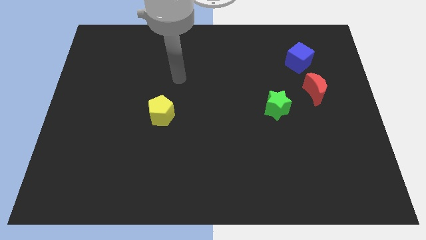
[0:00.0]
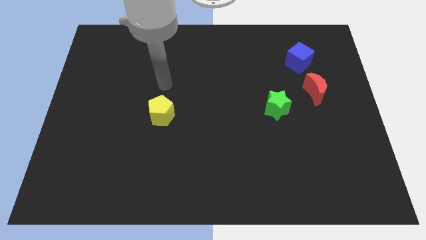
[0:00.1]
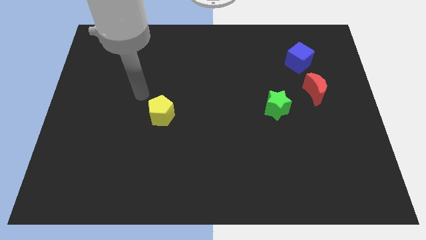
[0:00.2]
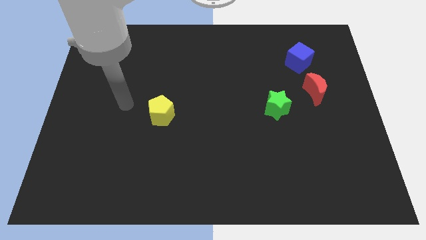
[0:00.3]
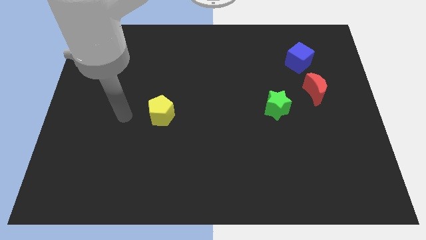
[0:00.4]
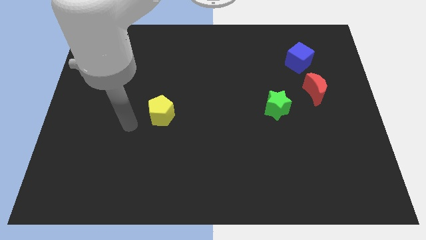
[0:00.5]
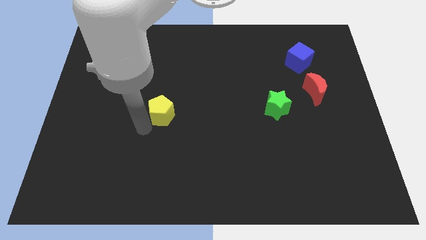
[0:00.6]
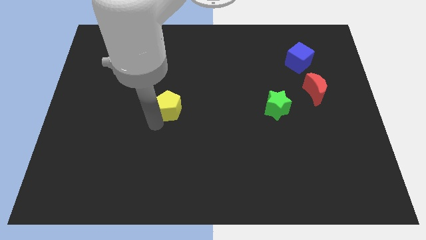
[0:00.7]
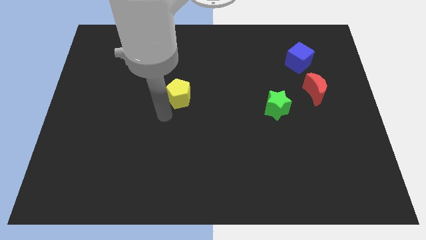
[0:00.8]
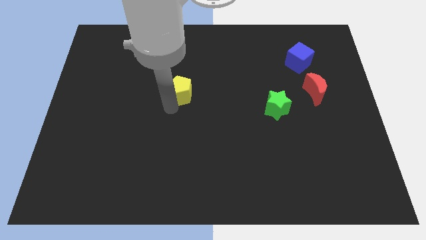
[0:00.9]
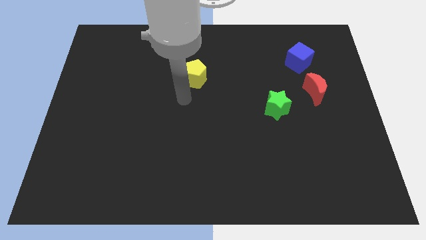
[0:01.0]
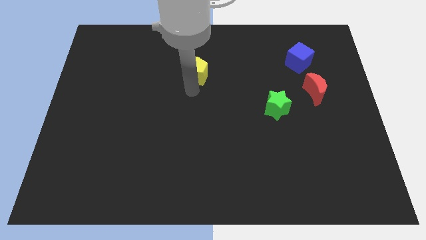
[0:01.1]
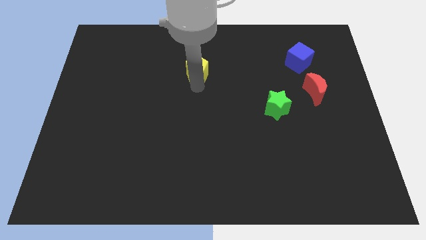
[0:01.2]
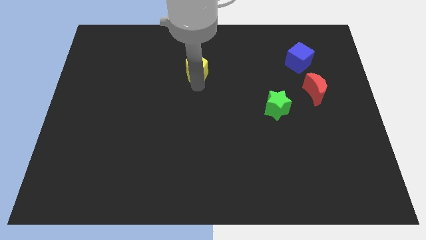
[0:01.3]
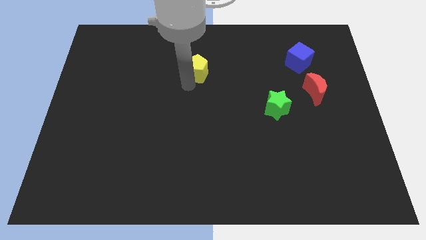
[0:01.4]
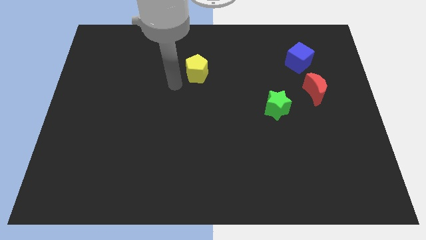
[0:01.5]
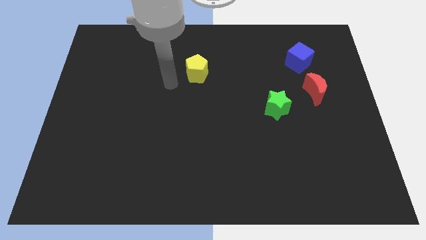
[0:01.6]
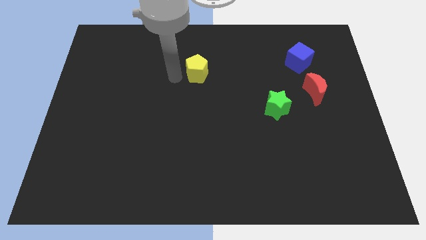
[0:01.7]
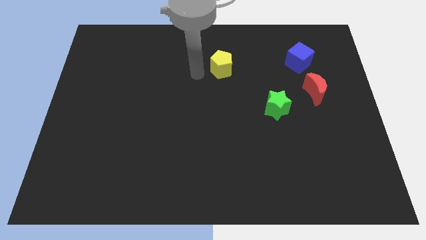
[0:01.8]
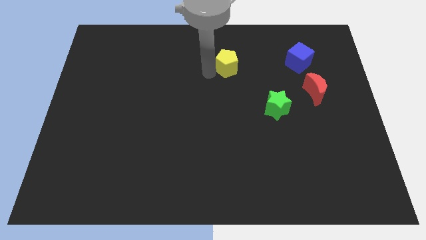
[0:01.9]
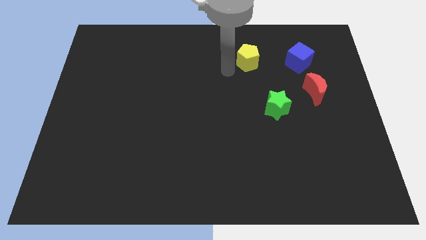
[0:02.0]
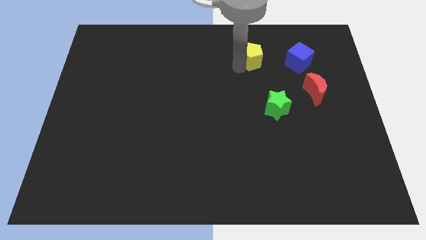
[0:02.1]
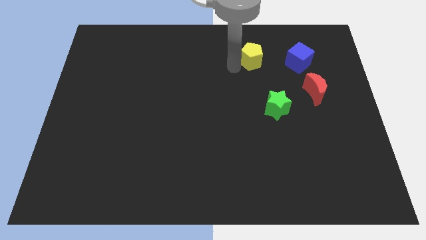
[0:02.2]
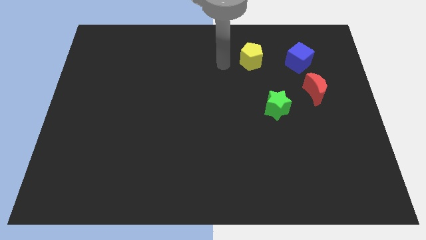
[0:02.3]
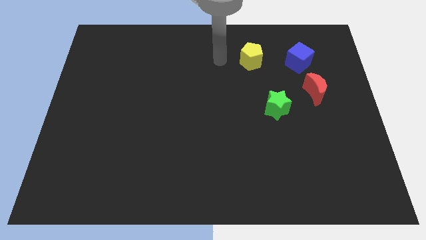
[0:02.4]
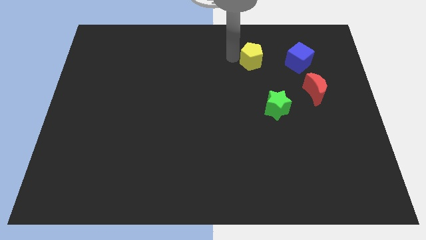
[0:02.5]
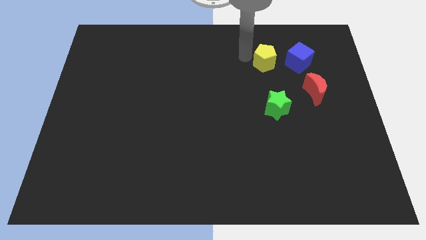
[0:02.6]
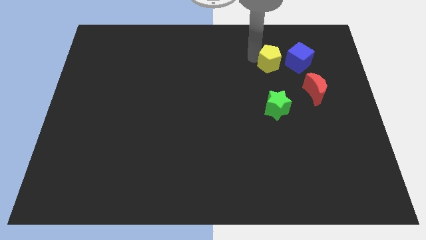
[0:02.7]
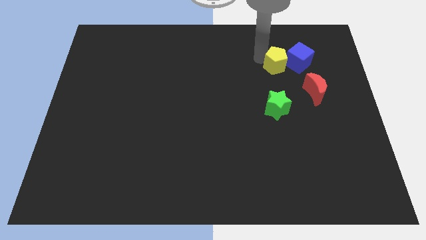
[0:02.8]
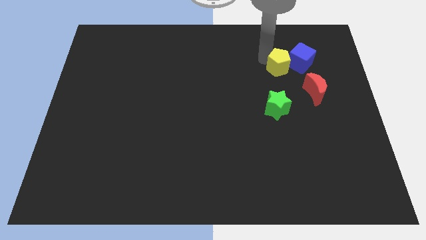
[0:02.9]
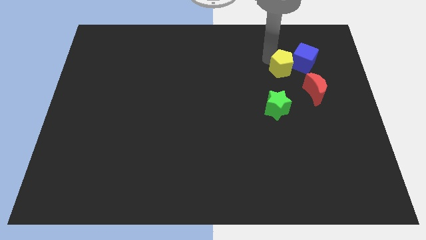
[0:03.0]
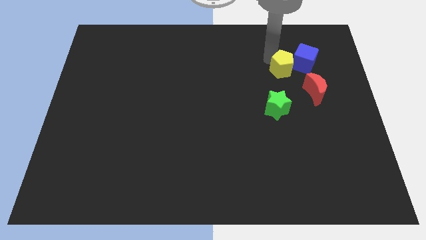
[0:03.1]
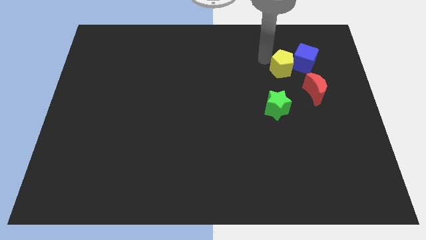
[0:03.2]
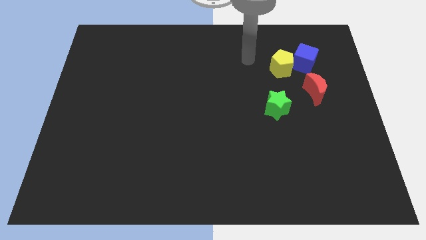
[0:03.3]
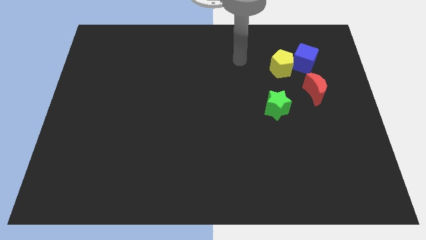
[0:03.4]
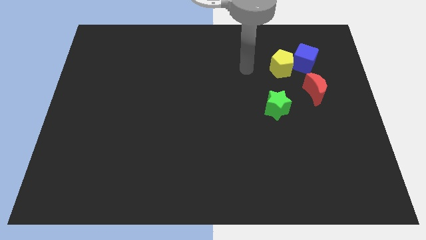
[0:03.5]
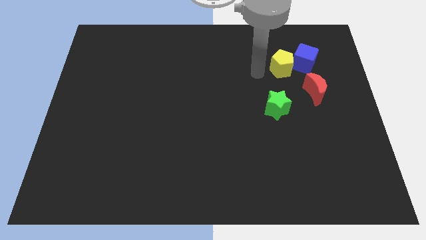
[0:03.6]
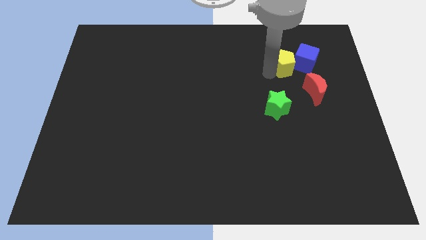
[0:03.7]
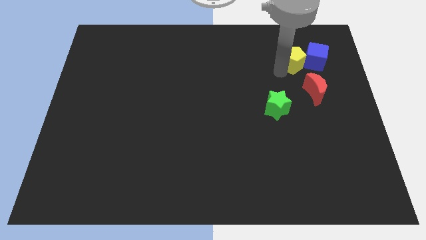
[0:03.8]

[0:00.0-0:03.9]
slide the pentagon close to the blue cube

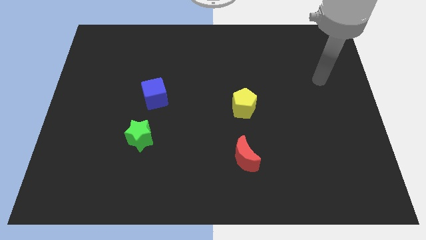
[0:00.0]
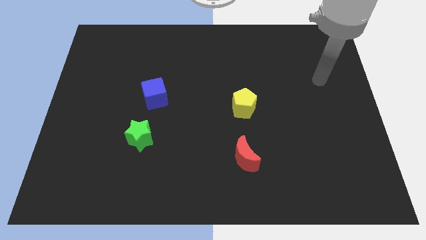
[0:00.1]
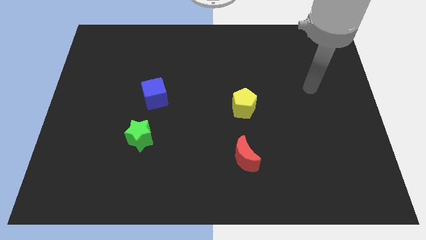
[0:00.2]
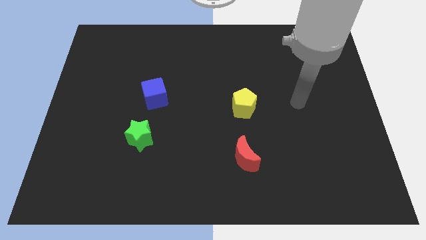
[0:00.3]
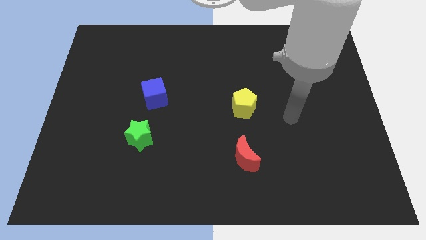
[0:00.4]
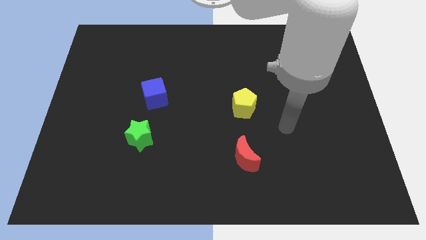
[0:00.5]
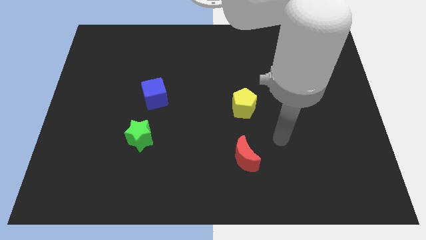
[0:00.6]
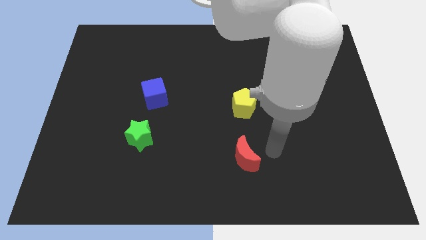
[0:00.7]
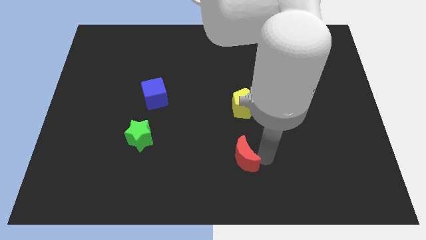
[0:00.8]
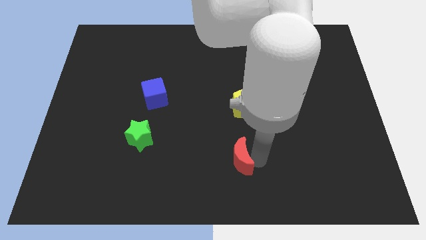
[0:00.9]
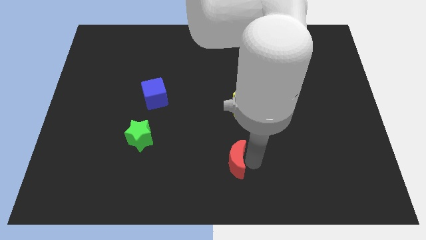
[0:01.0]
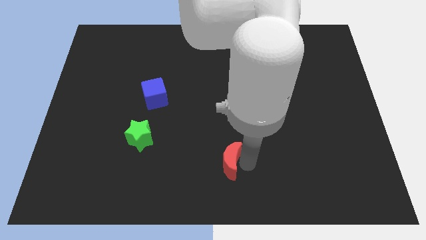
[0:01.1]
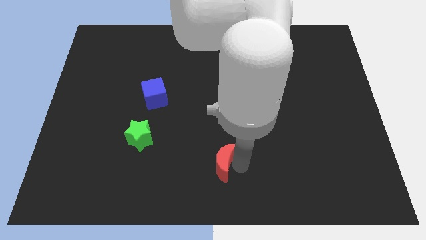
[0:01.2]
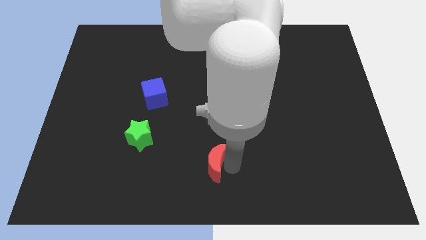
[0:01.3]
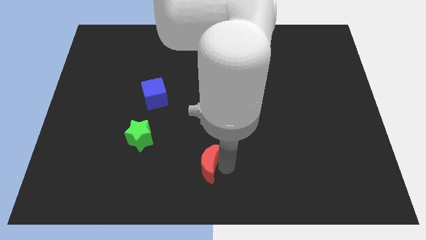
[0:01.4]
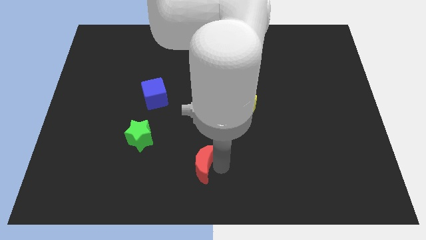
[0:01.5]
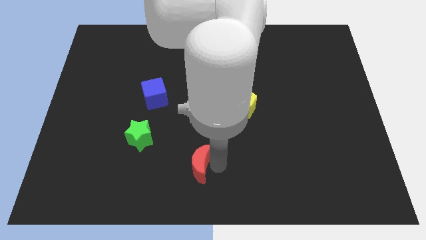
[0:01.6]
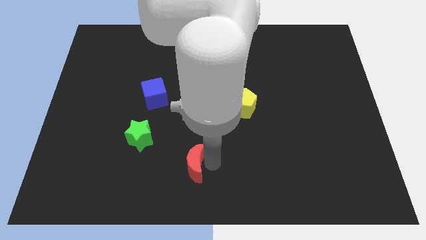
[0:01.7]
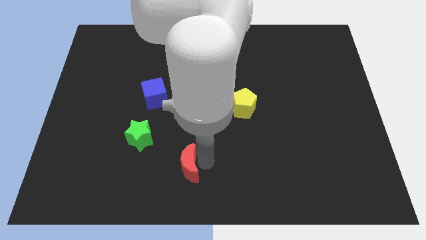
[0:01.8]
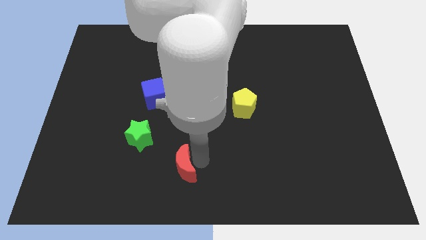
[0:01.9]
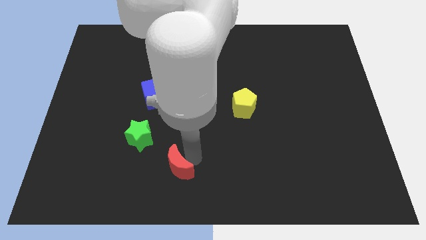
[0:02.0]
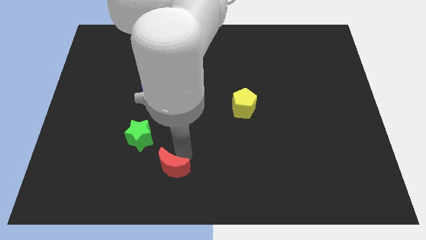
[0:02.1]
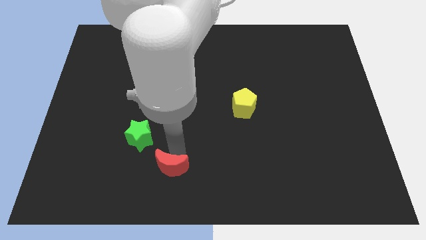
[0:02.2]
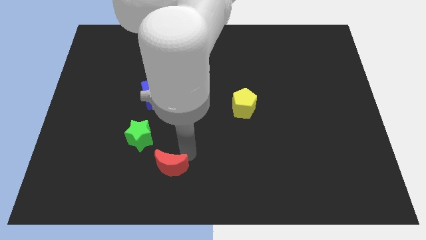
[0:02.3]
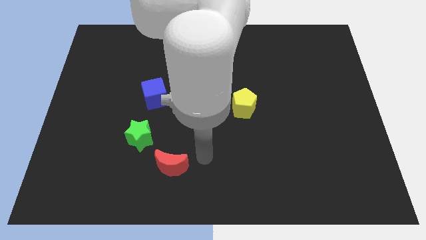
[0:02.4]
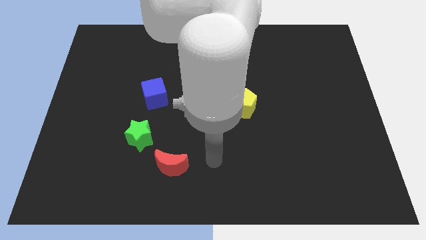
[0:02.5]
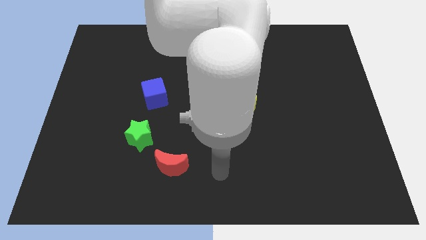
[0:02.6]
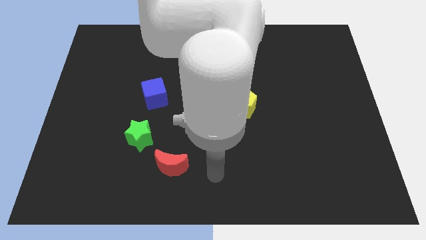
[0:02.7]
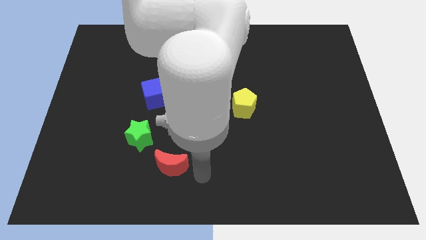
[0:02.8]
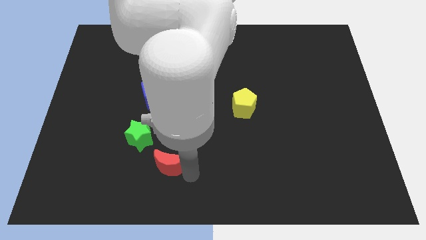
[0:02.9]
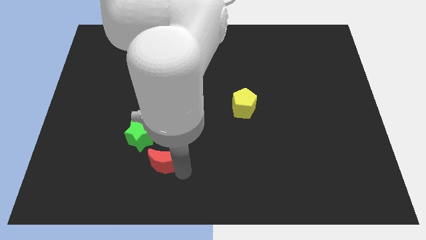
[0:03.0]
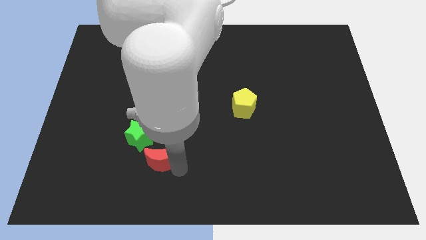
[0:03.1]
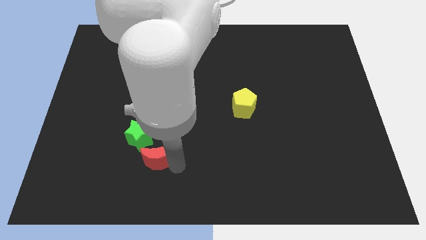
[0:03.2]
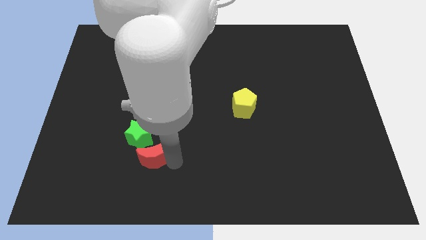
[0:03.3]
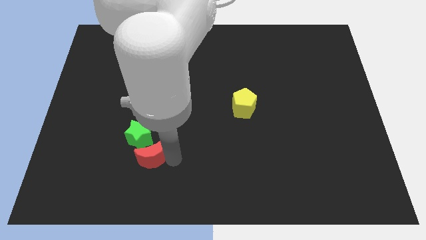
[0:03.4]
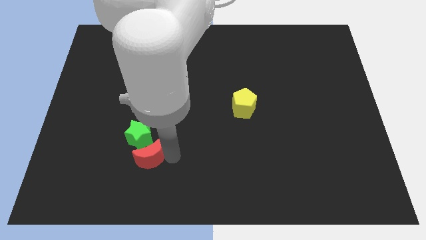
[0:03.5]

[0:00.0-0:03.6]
move the red moon towards the green star

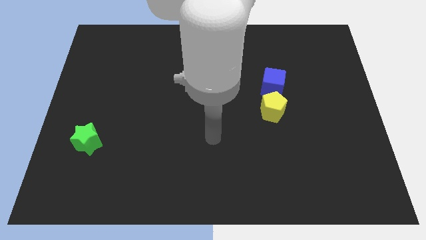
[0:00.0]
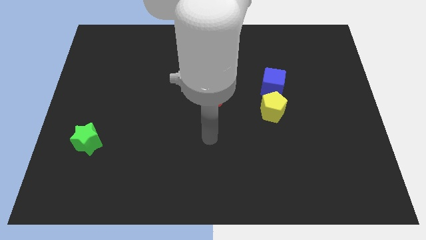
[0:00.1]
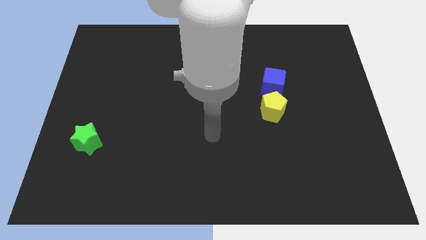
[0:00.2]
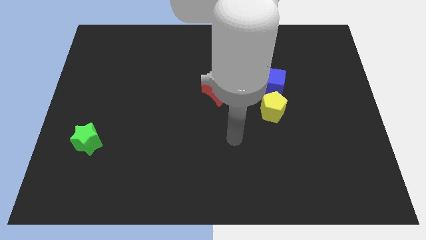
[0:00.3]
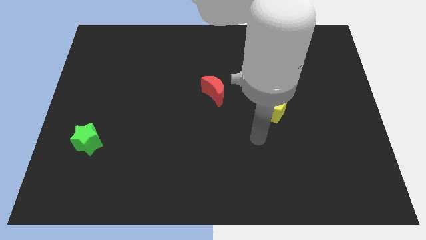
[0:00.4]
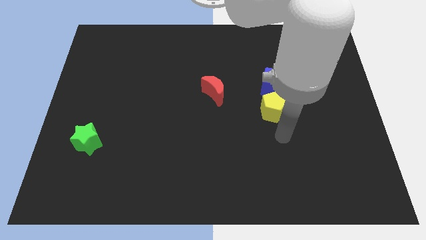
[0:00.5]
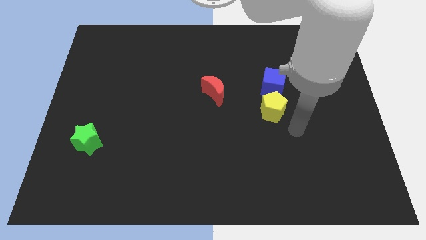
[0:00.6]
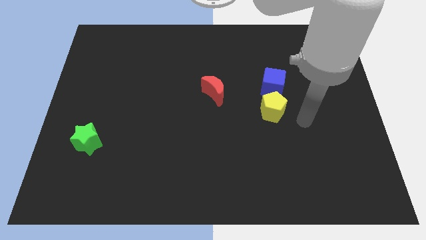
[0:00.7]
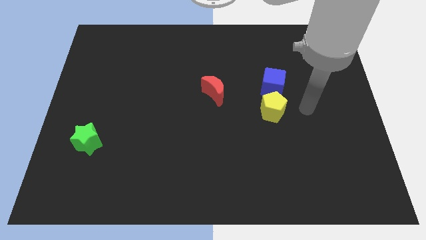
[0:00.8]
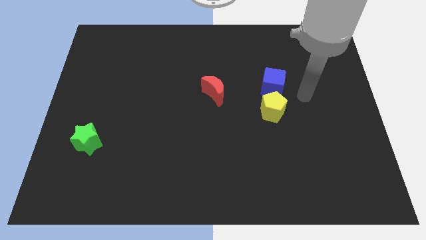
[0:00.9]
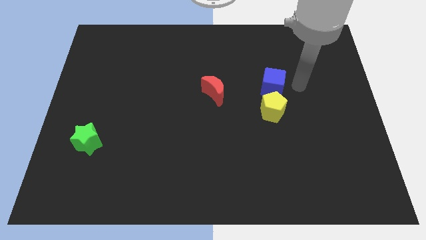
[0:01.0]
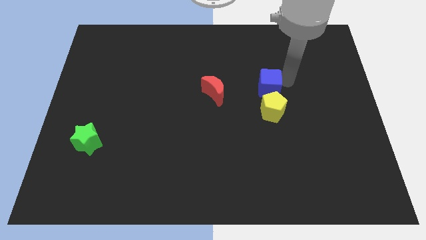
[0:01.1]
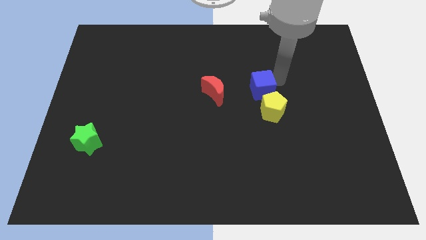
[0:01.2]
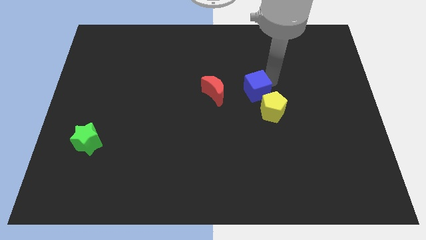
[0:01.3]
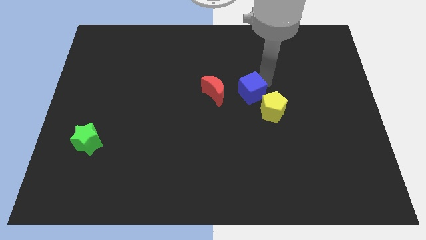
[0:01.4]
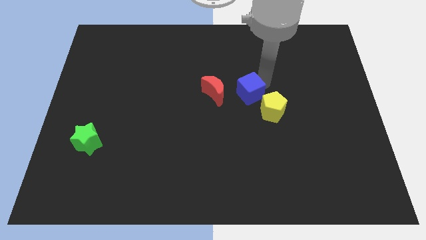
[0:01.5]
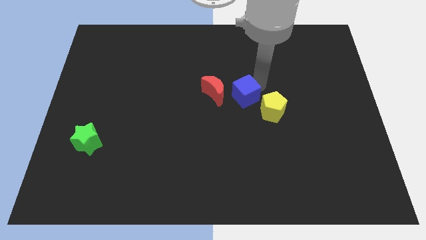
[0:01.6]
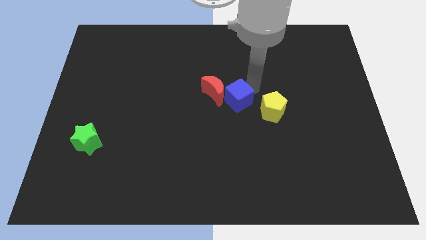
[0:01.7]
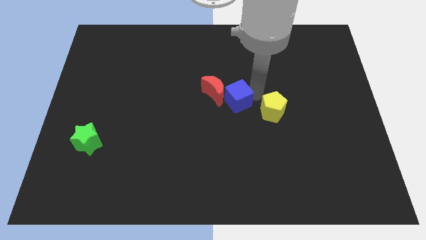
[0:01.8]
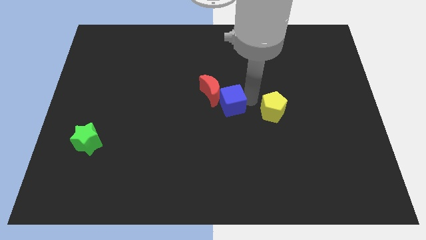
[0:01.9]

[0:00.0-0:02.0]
move the blue cube to the red block
